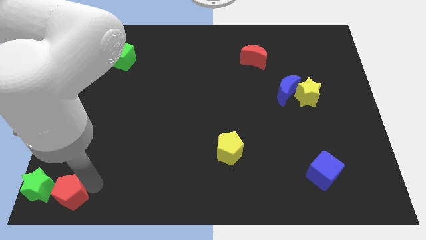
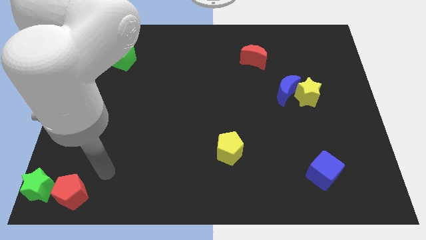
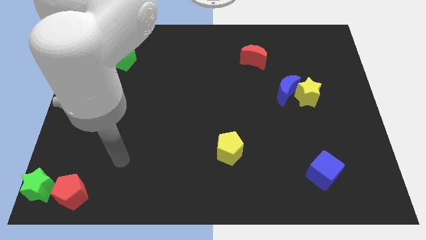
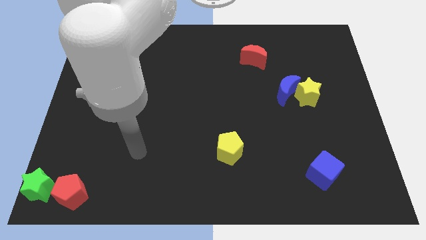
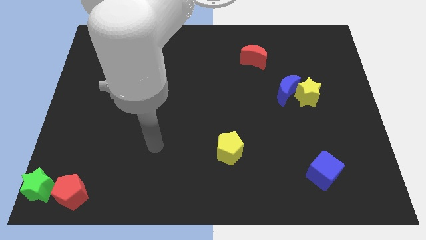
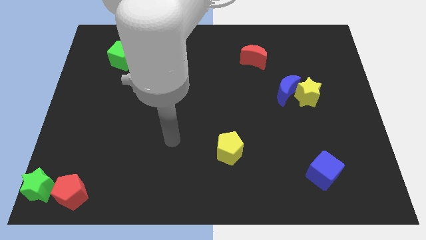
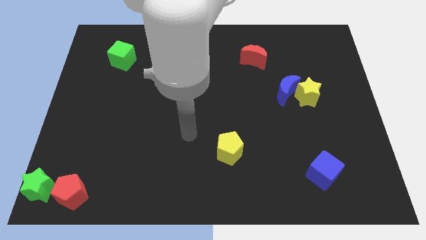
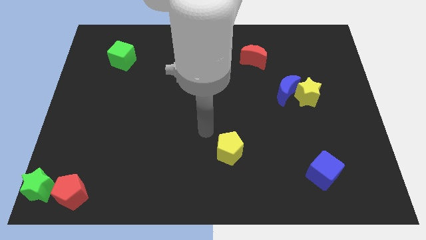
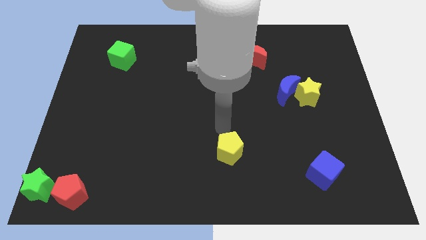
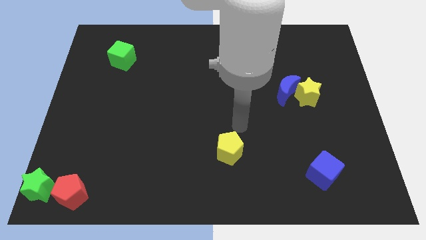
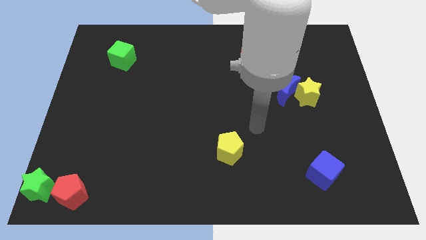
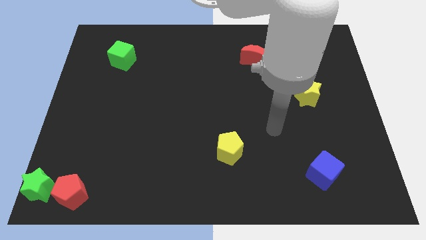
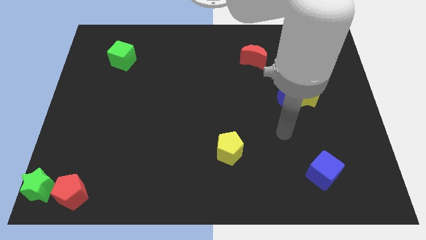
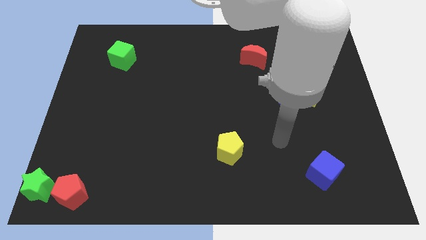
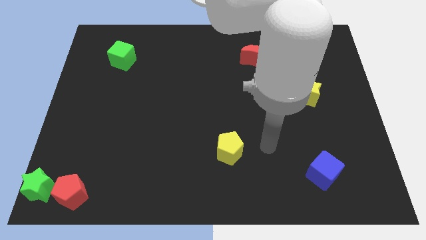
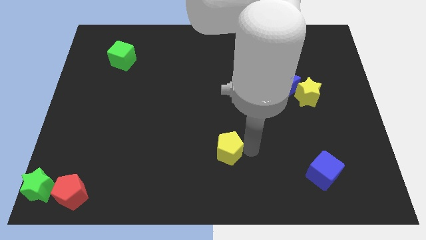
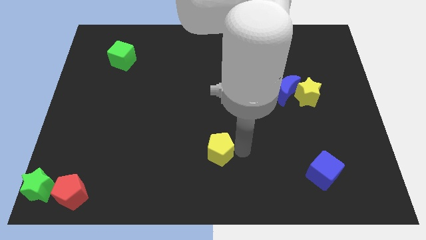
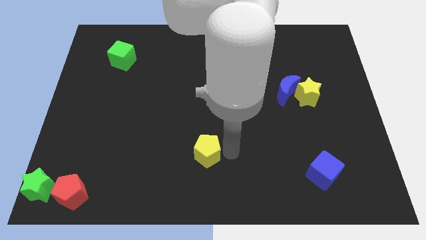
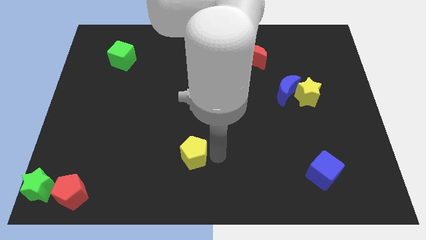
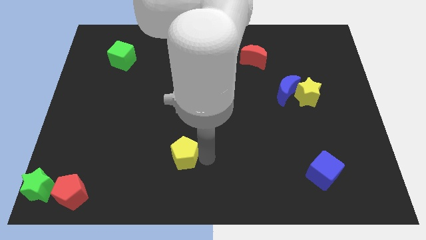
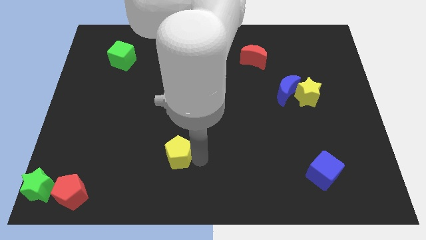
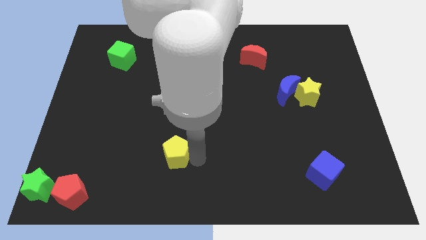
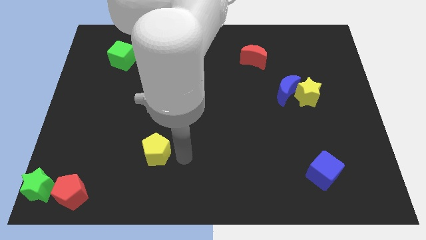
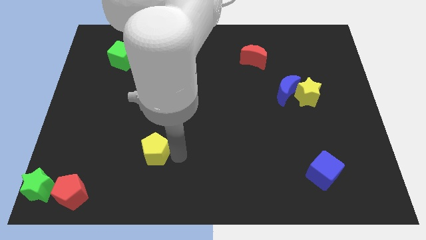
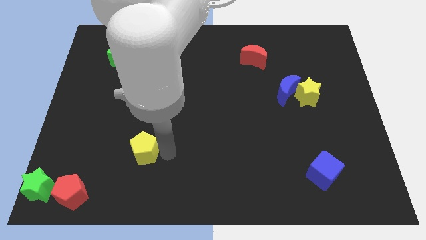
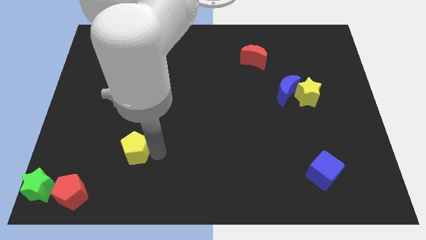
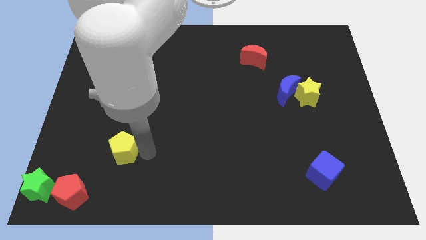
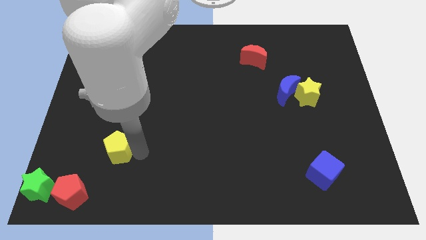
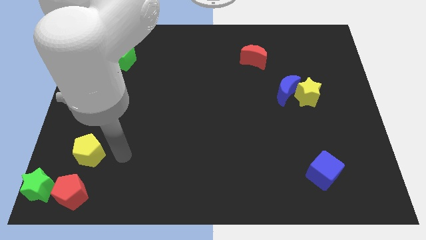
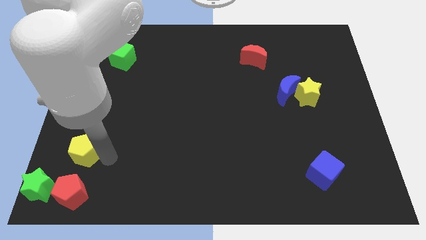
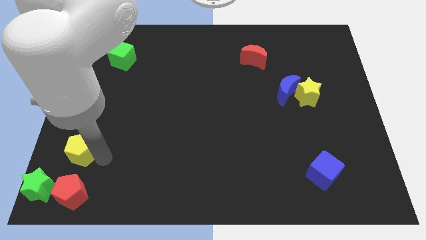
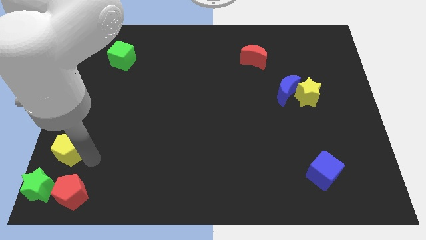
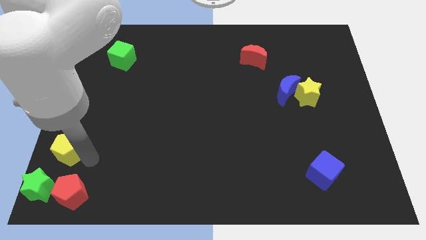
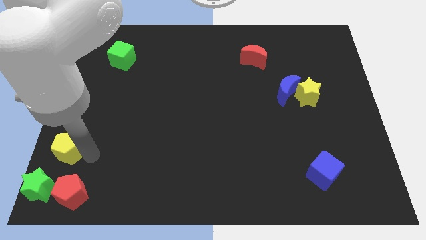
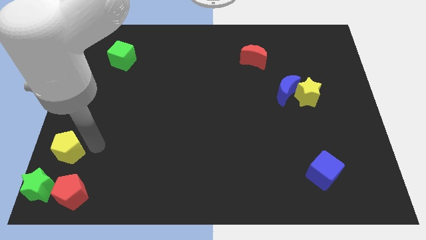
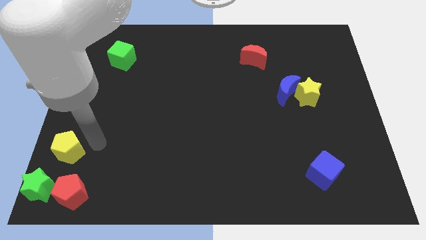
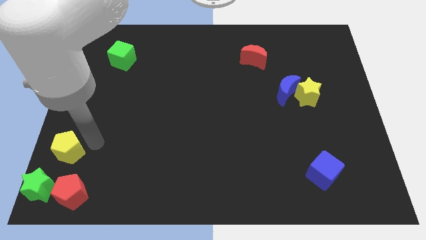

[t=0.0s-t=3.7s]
move the yellow pentagon above the red pentagon

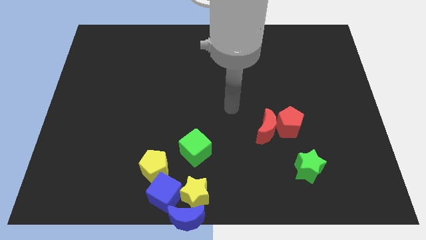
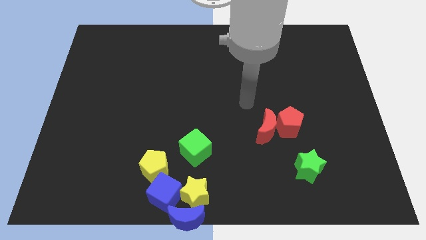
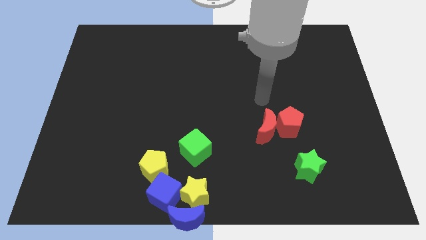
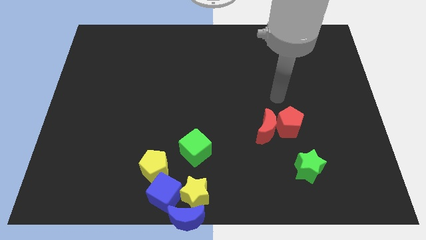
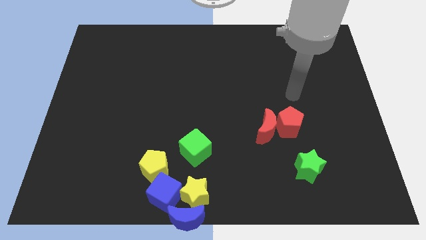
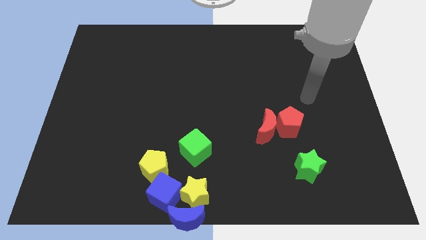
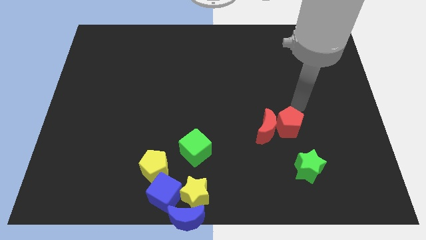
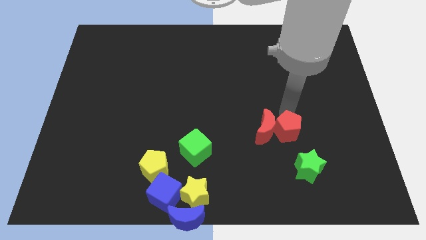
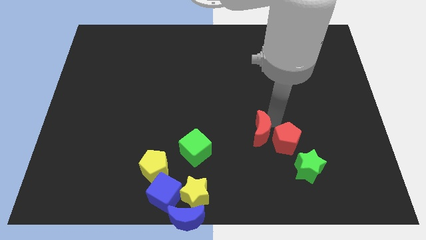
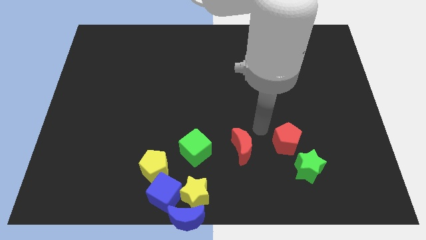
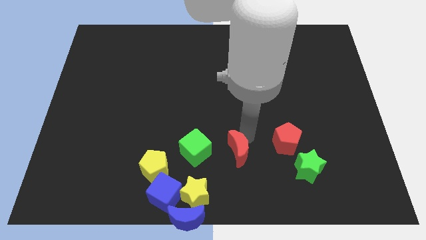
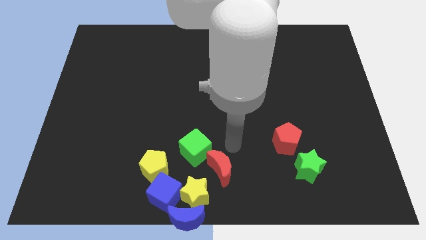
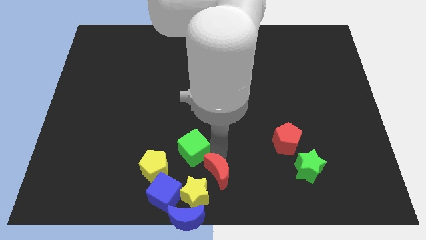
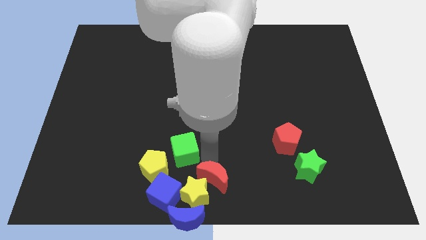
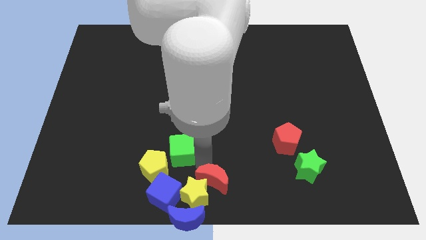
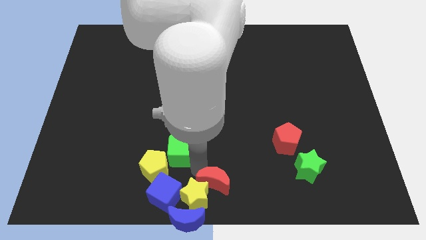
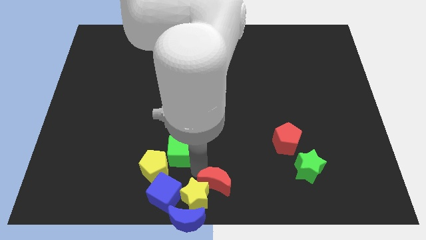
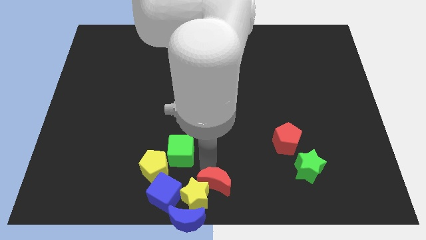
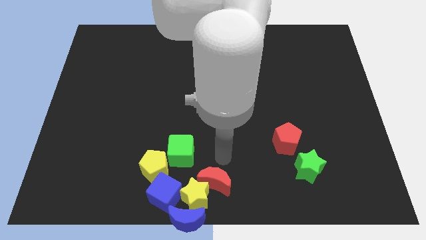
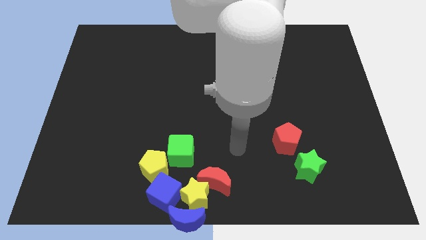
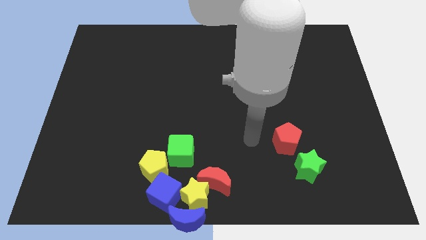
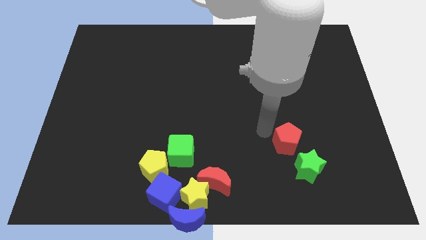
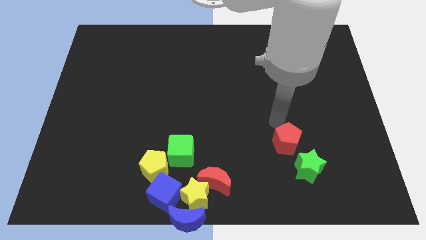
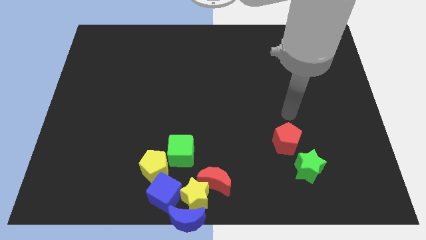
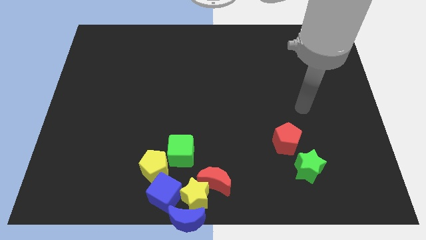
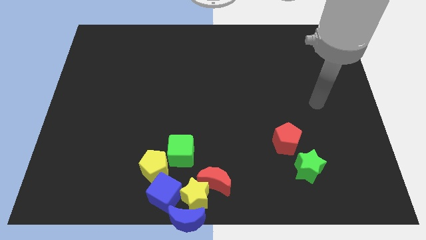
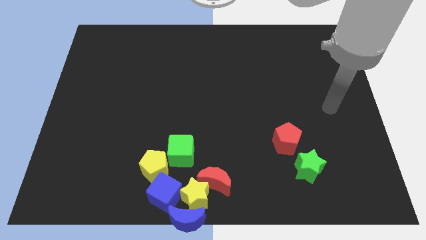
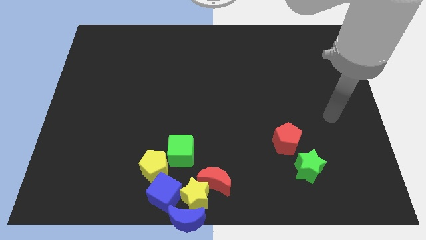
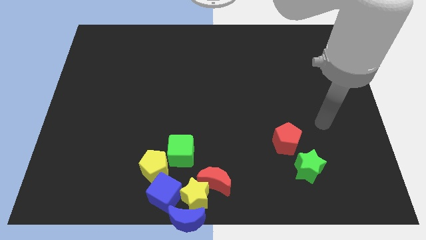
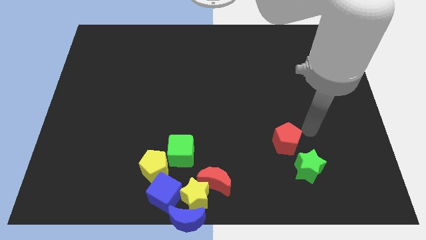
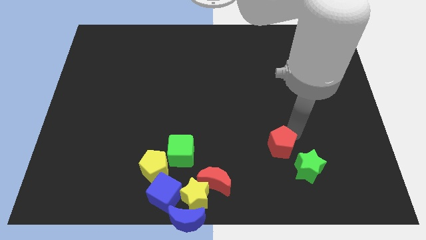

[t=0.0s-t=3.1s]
place the red crescent near the yellow star

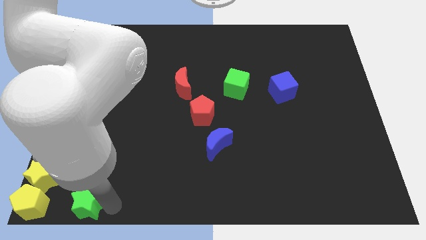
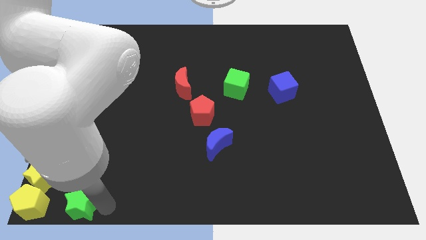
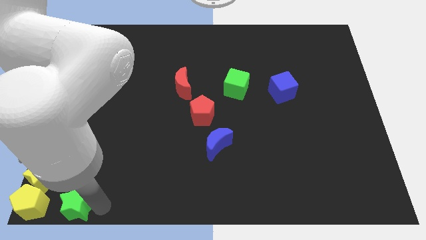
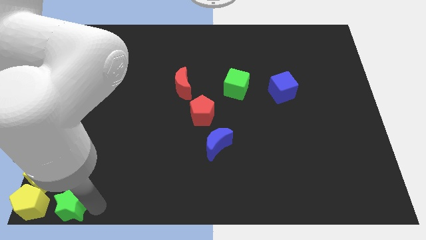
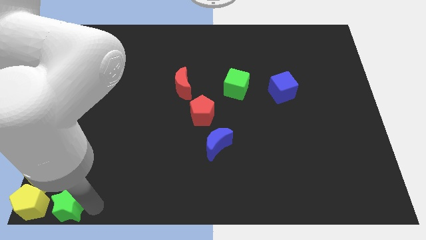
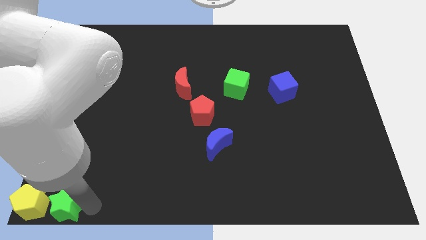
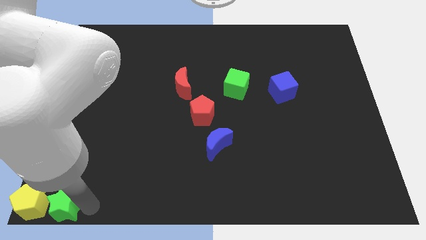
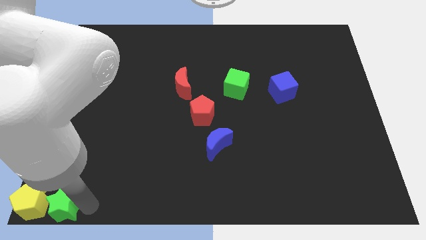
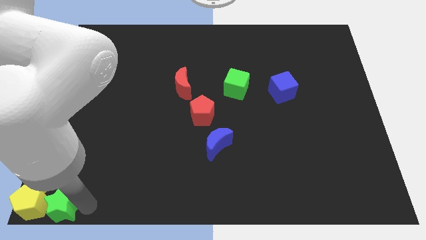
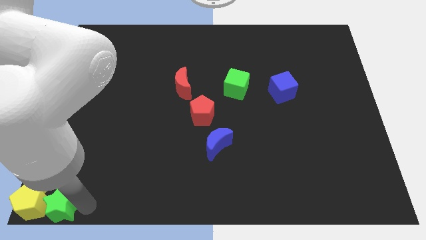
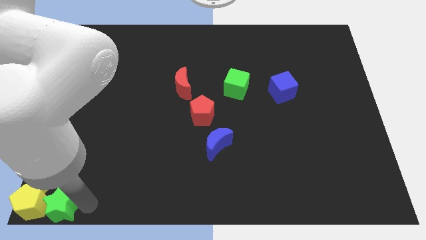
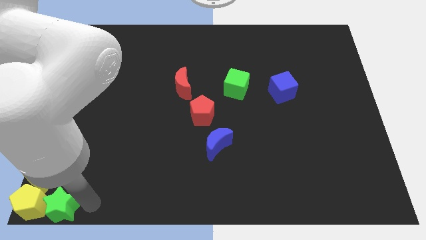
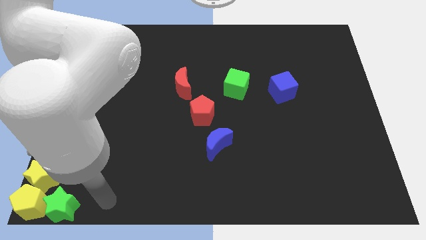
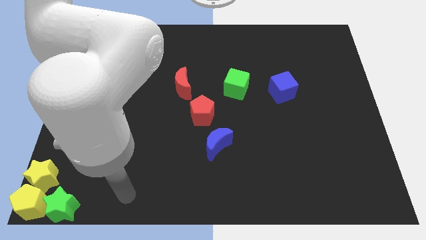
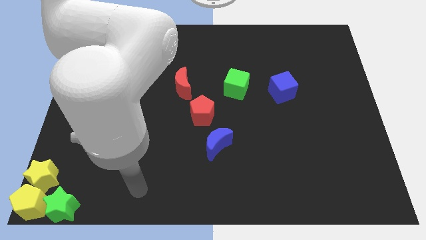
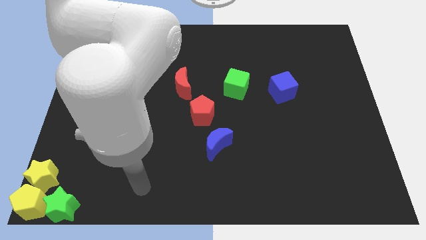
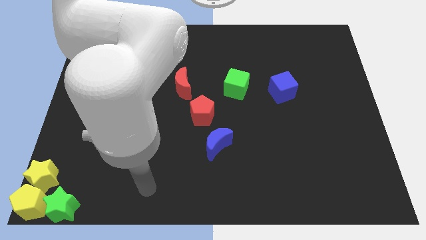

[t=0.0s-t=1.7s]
push the green star towards the yellow pentagon

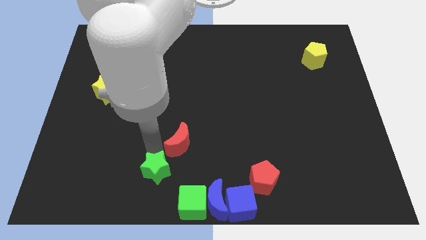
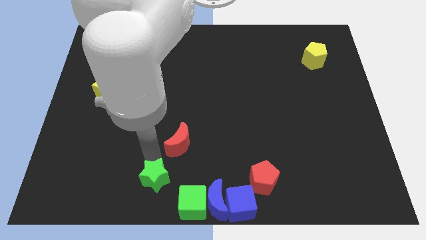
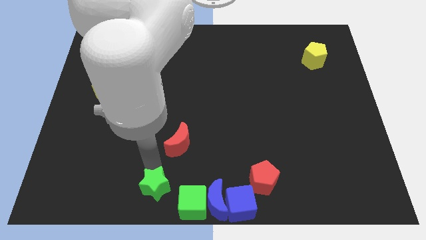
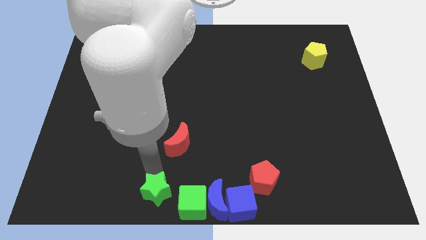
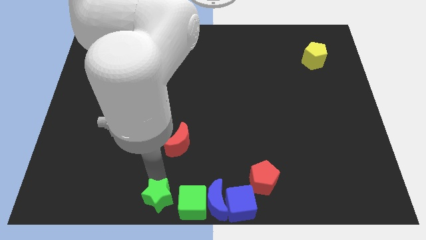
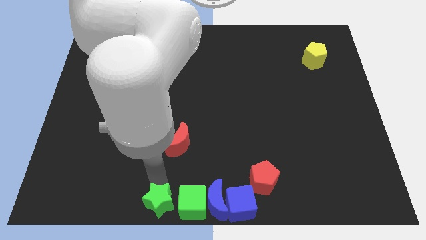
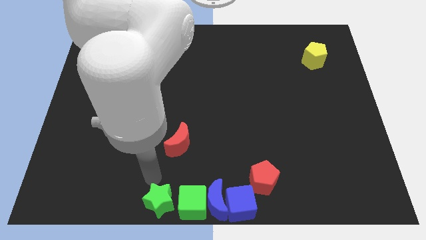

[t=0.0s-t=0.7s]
place the green star to the left of the green cube
